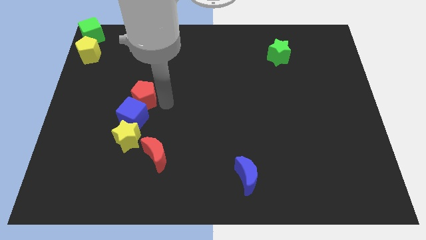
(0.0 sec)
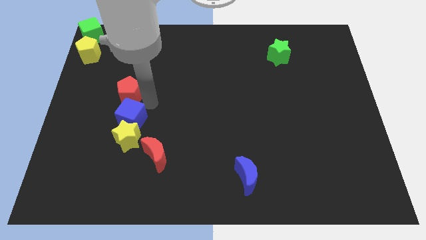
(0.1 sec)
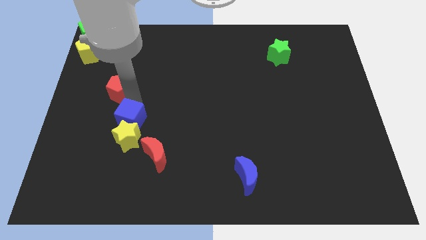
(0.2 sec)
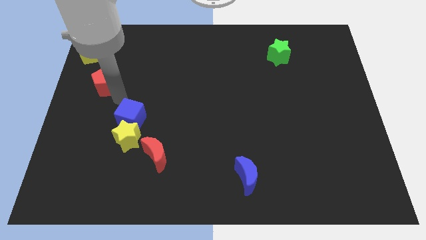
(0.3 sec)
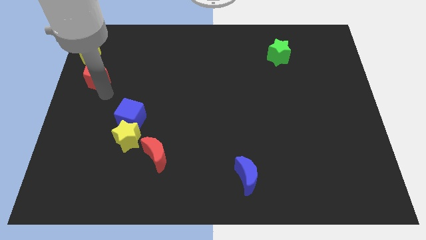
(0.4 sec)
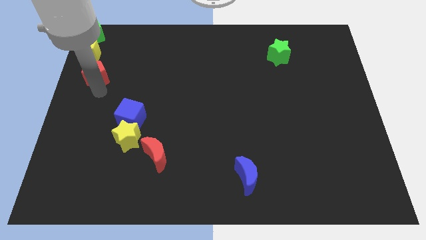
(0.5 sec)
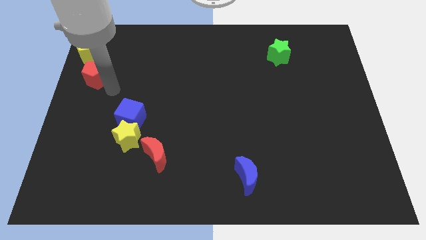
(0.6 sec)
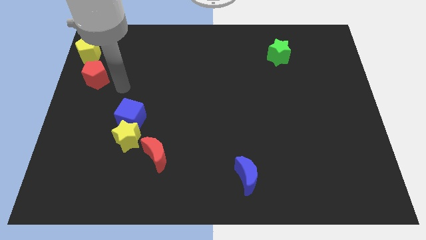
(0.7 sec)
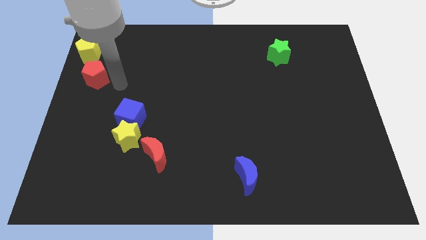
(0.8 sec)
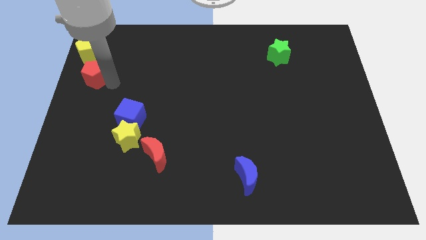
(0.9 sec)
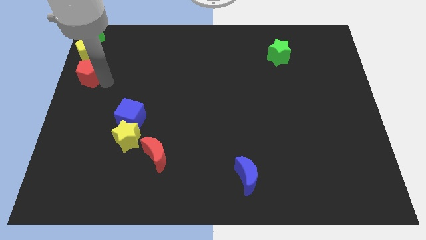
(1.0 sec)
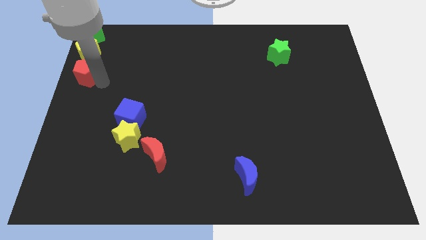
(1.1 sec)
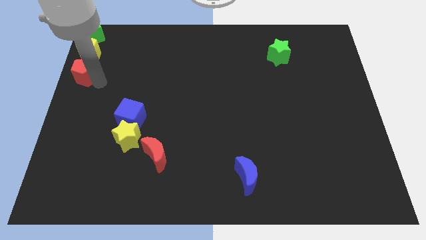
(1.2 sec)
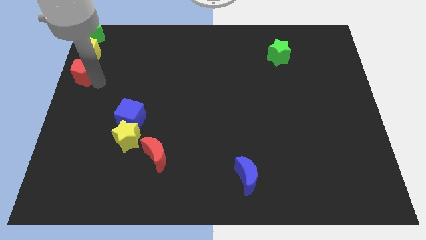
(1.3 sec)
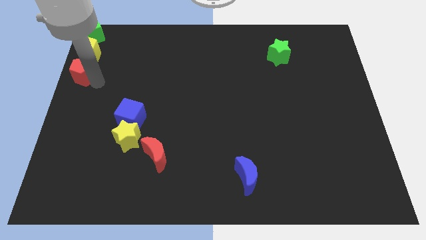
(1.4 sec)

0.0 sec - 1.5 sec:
place the red pentagon below the yellow pentagon

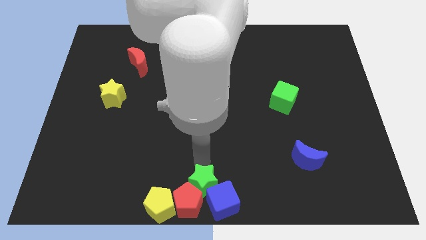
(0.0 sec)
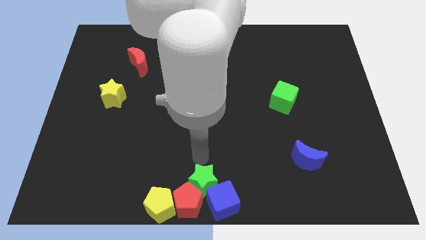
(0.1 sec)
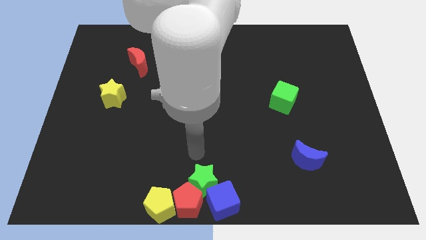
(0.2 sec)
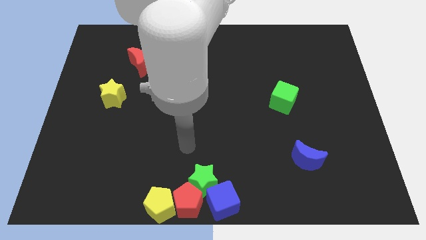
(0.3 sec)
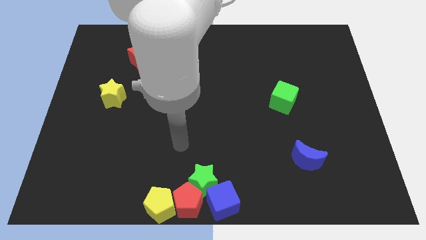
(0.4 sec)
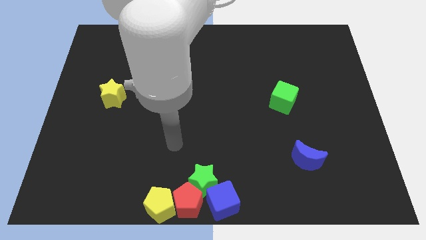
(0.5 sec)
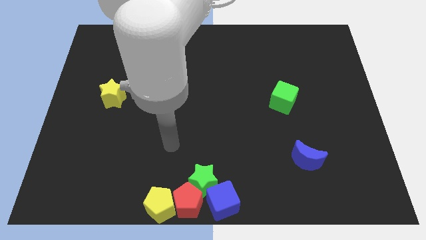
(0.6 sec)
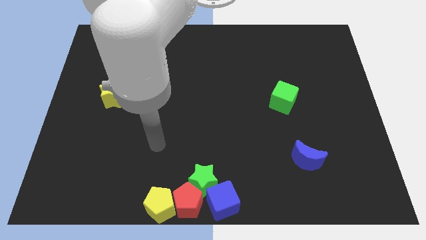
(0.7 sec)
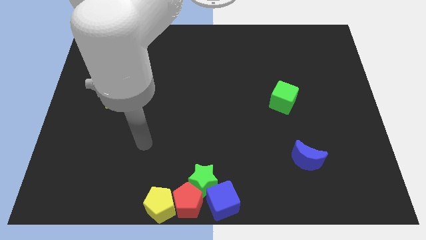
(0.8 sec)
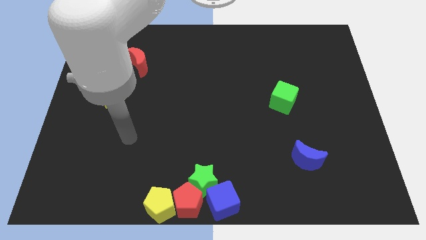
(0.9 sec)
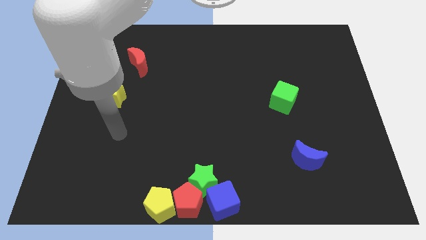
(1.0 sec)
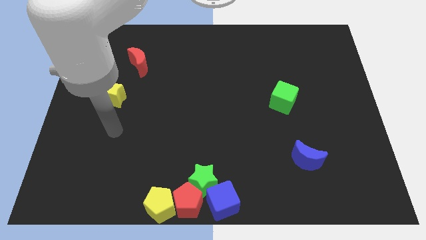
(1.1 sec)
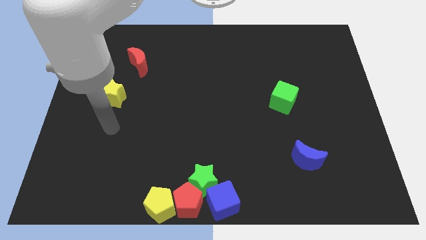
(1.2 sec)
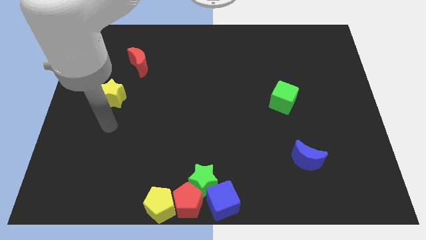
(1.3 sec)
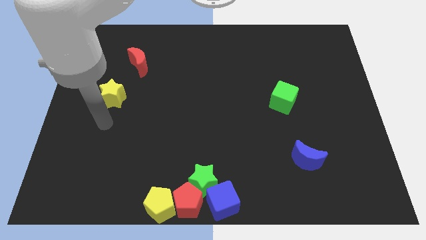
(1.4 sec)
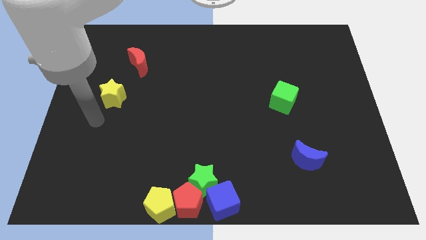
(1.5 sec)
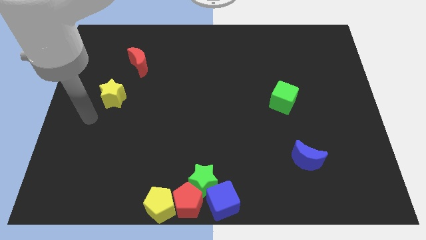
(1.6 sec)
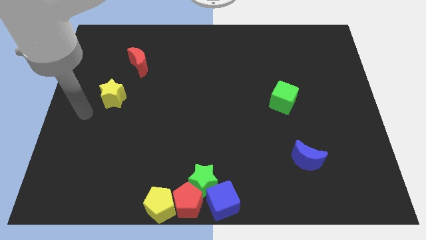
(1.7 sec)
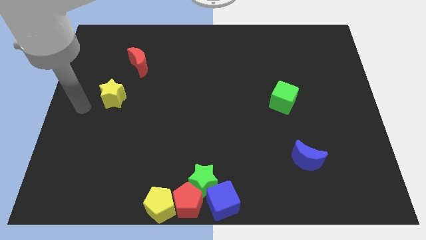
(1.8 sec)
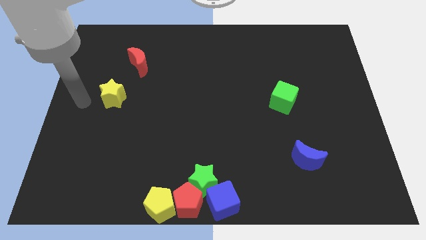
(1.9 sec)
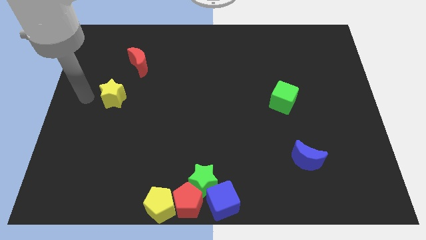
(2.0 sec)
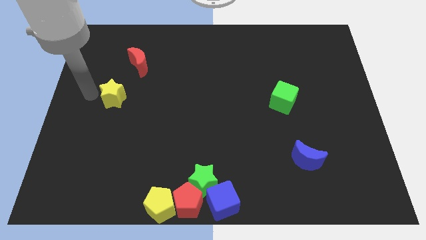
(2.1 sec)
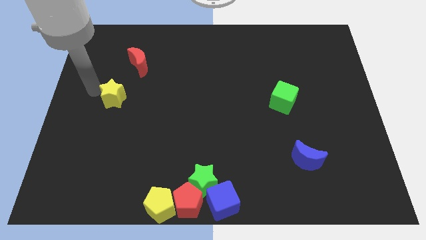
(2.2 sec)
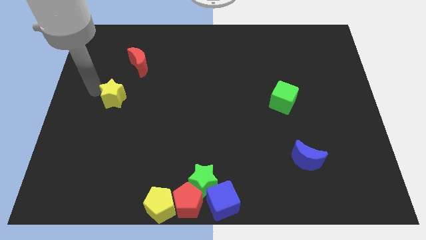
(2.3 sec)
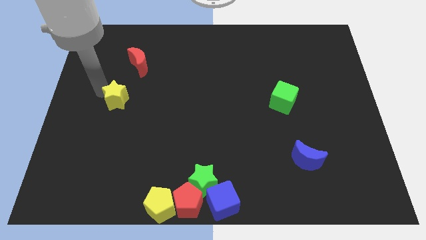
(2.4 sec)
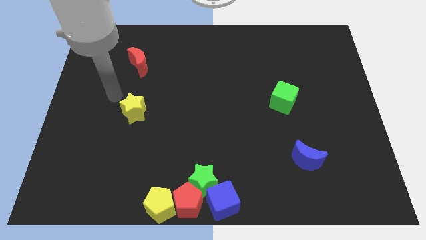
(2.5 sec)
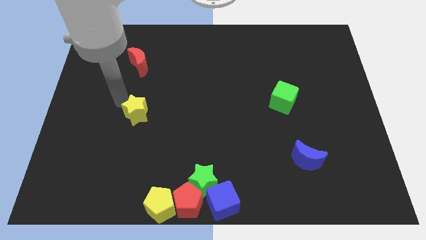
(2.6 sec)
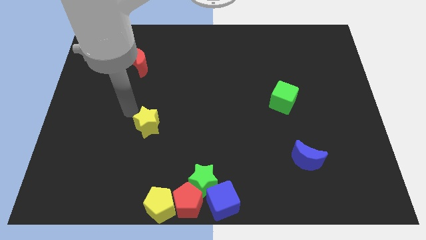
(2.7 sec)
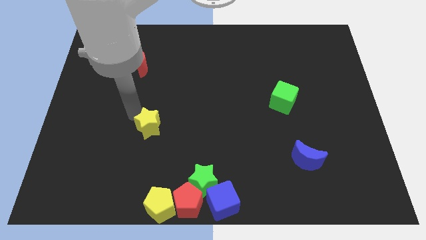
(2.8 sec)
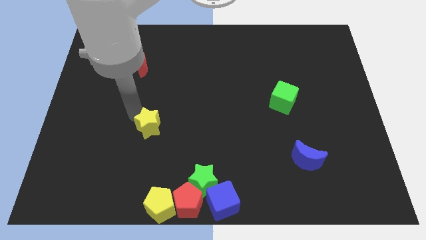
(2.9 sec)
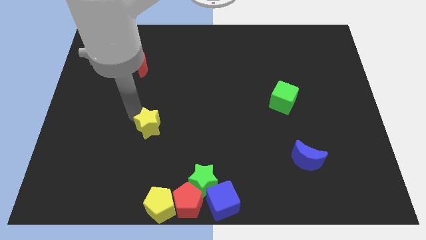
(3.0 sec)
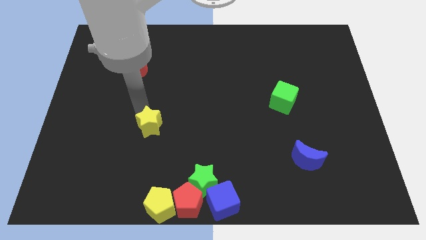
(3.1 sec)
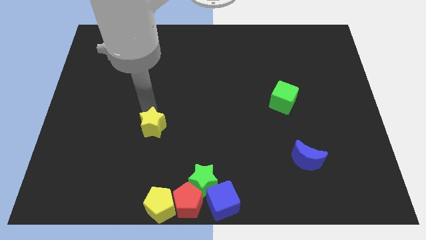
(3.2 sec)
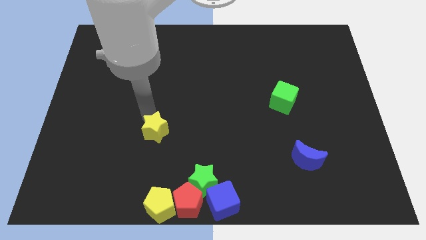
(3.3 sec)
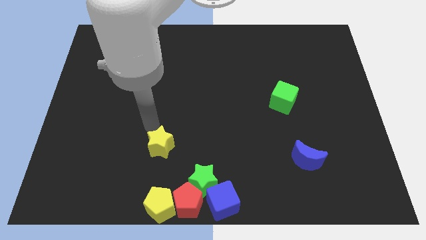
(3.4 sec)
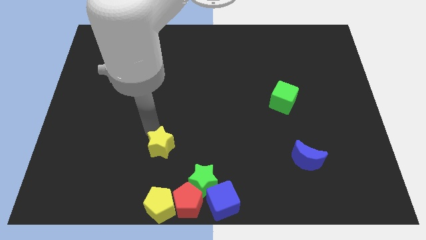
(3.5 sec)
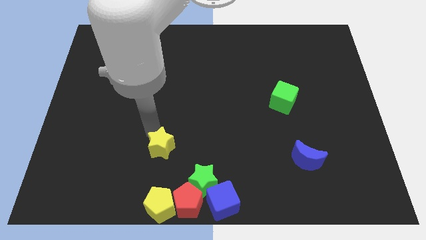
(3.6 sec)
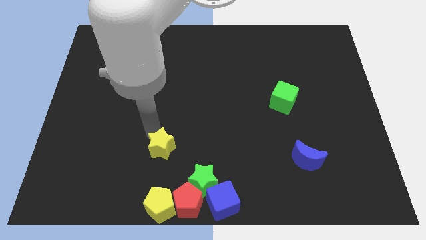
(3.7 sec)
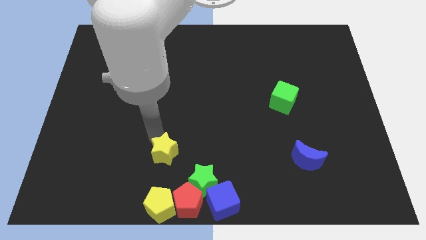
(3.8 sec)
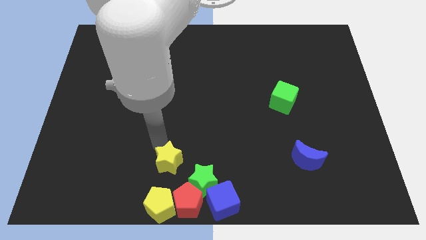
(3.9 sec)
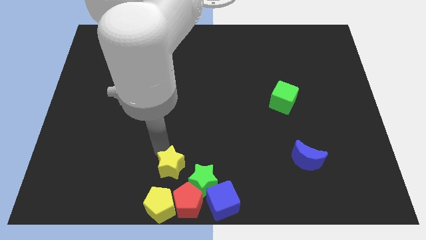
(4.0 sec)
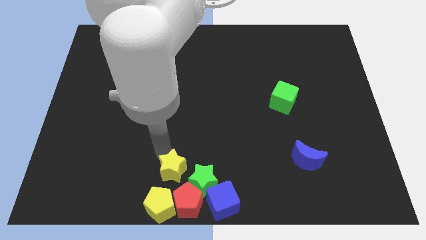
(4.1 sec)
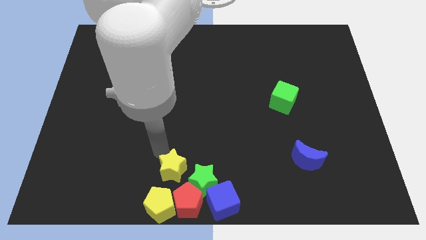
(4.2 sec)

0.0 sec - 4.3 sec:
move the yellow star towards group of blocks

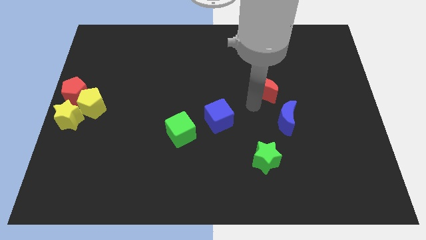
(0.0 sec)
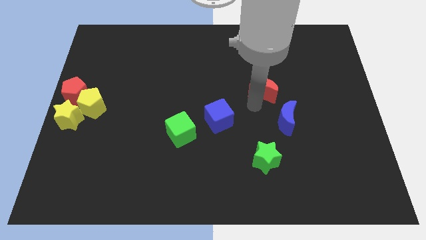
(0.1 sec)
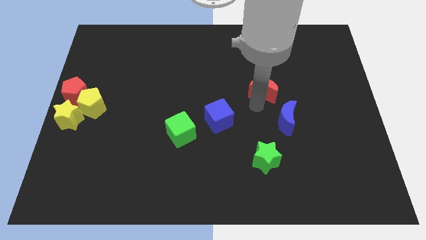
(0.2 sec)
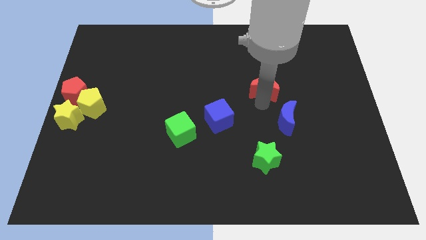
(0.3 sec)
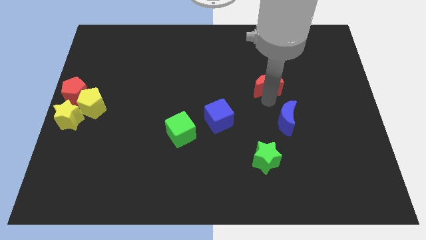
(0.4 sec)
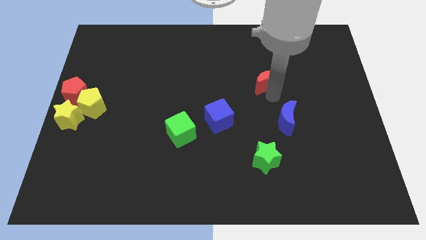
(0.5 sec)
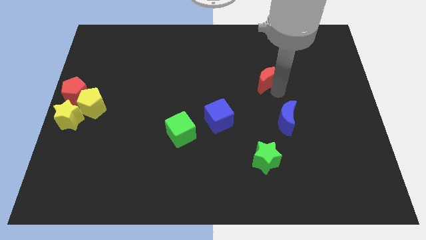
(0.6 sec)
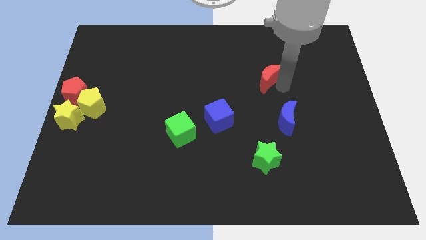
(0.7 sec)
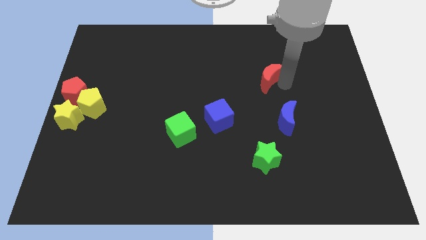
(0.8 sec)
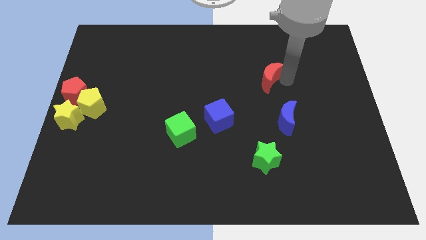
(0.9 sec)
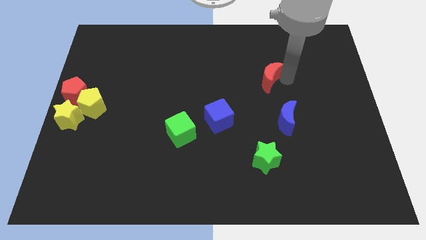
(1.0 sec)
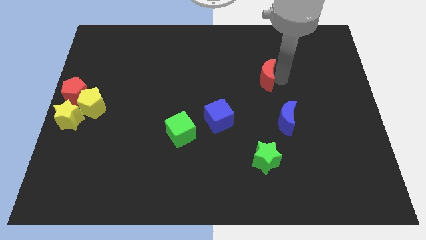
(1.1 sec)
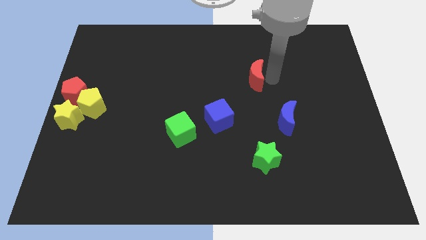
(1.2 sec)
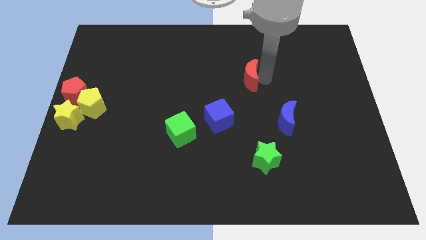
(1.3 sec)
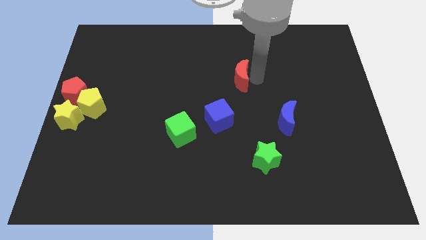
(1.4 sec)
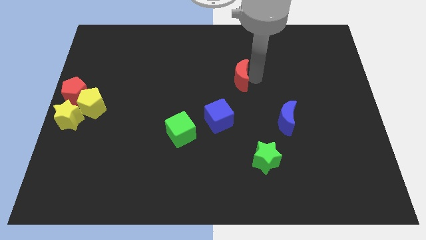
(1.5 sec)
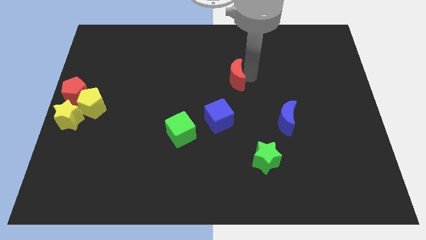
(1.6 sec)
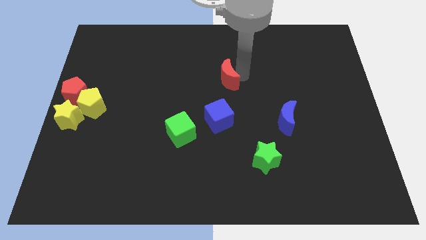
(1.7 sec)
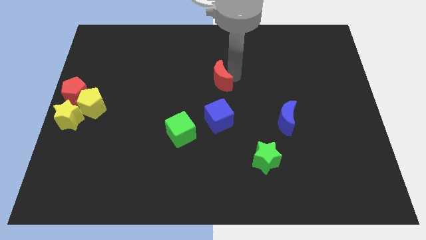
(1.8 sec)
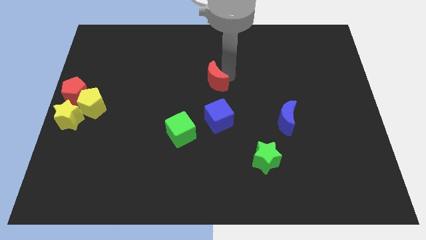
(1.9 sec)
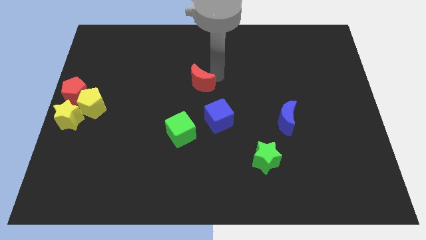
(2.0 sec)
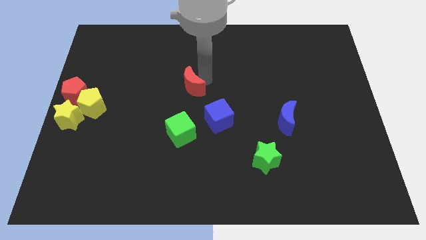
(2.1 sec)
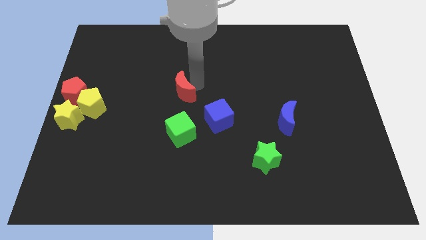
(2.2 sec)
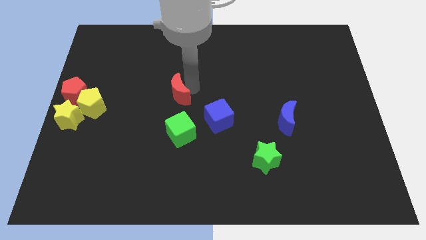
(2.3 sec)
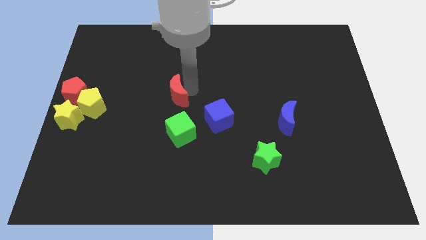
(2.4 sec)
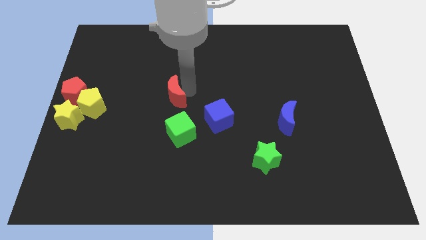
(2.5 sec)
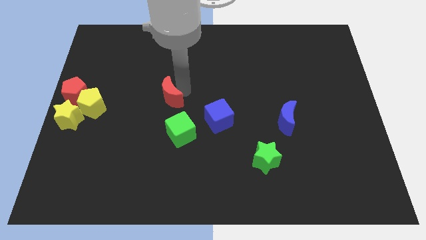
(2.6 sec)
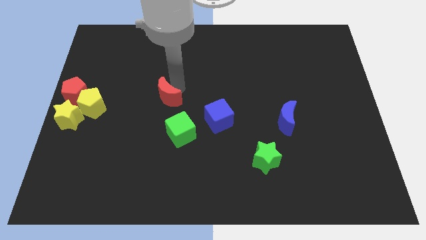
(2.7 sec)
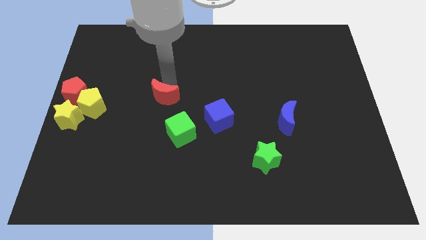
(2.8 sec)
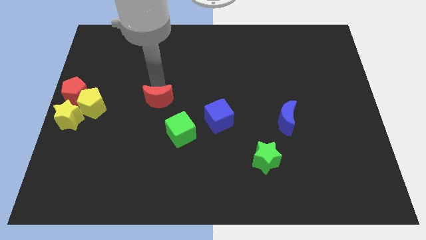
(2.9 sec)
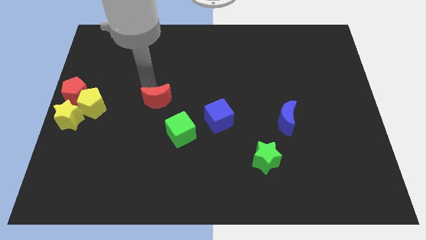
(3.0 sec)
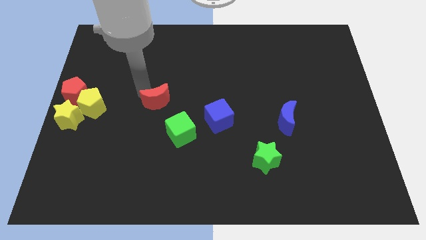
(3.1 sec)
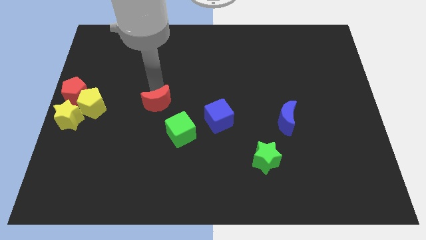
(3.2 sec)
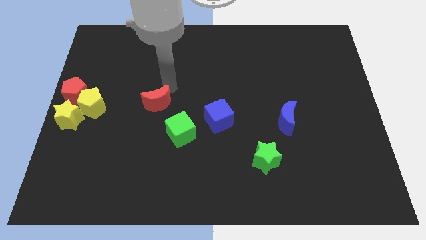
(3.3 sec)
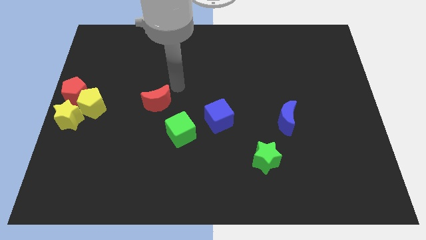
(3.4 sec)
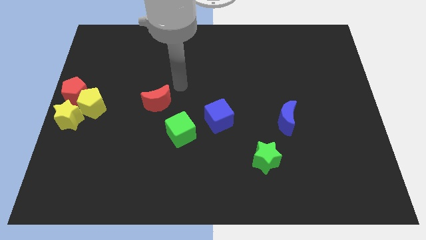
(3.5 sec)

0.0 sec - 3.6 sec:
move the red crescent to the right parallel to the yellow pentagon
